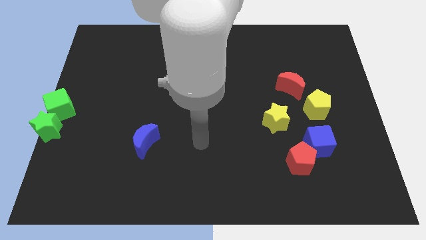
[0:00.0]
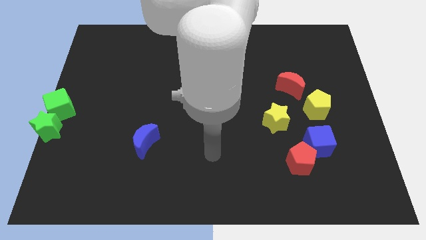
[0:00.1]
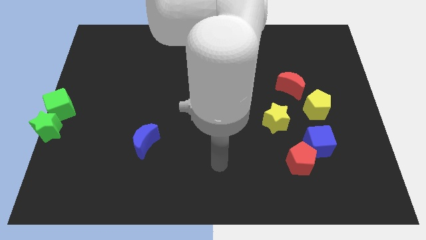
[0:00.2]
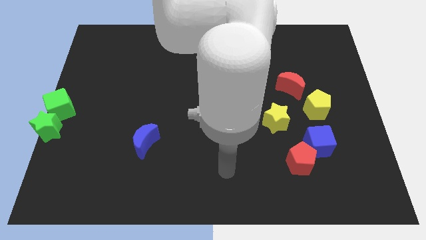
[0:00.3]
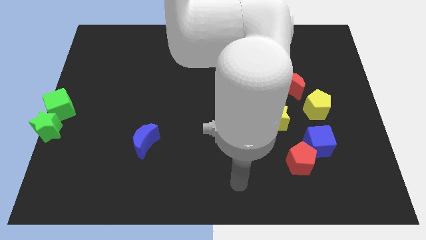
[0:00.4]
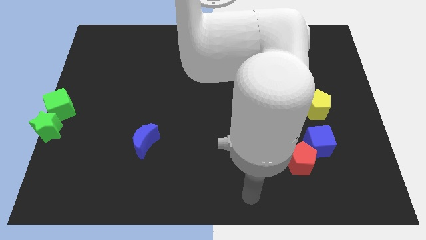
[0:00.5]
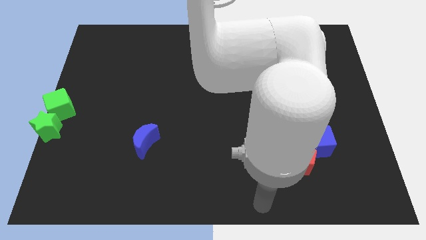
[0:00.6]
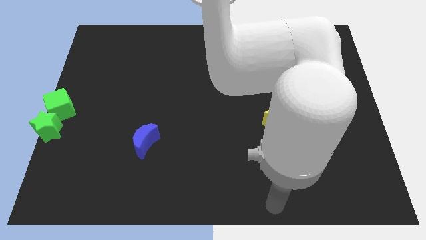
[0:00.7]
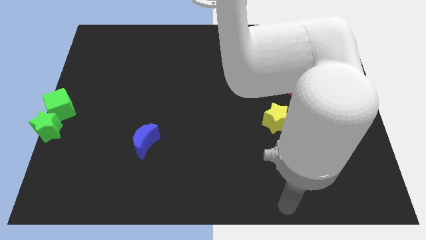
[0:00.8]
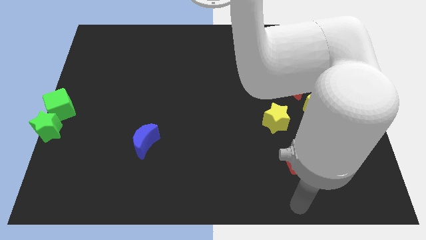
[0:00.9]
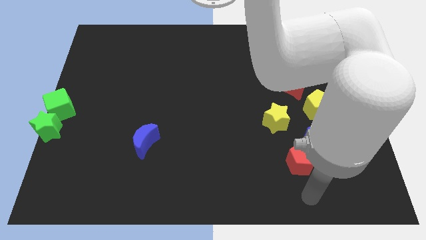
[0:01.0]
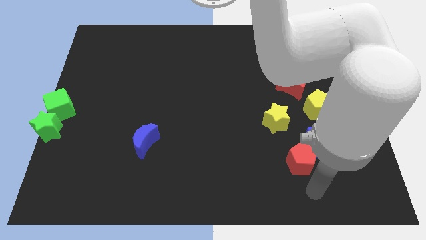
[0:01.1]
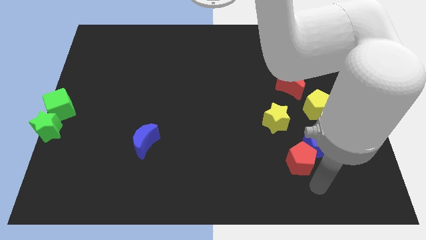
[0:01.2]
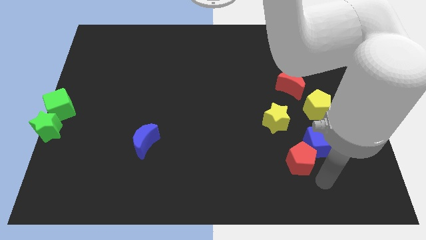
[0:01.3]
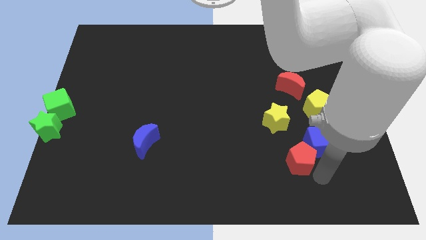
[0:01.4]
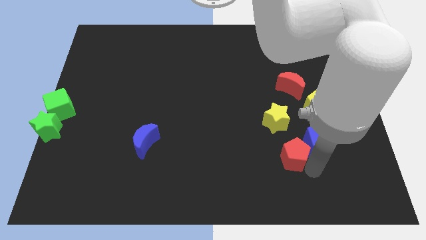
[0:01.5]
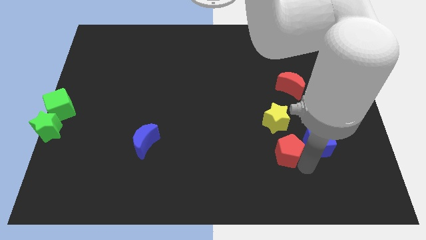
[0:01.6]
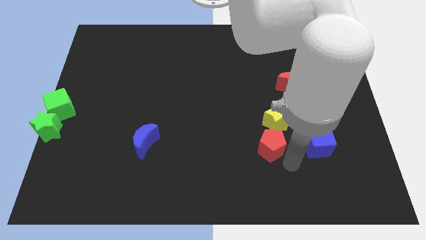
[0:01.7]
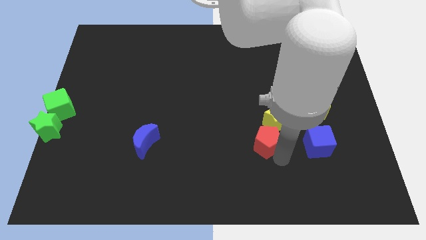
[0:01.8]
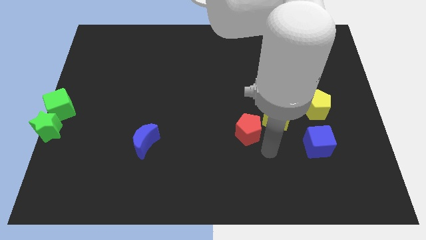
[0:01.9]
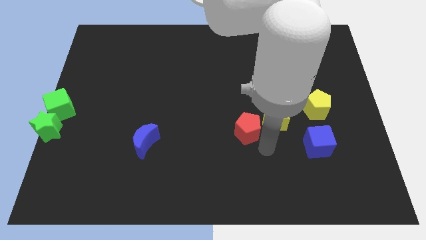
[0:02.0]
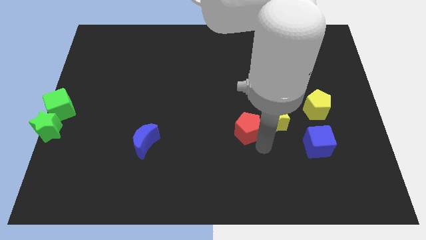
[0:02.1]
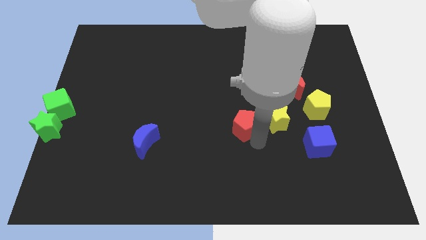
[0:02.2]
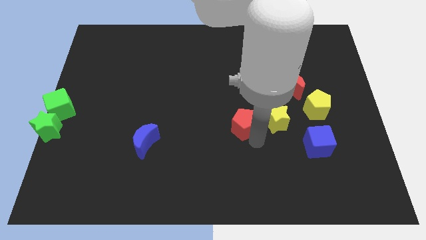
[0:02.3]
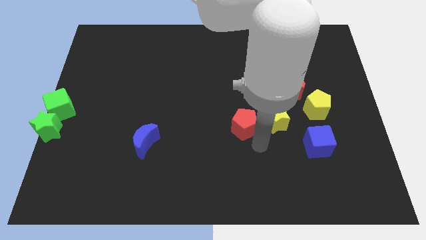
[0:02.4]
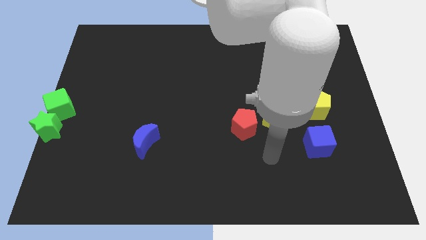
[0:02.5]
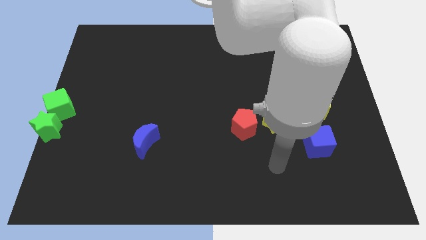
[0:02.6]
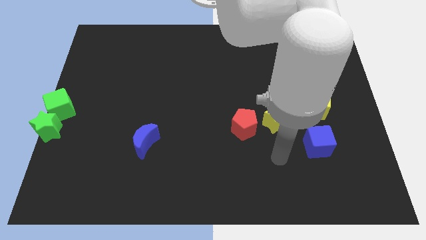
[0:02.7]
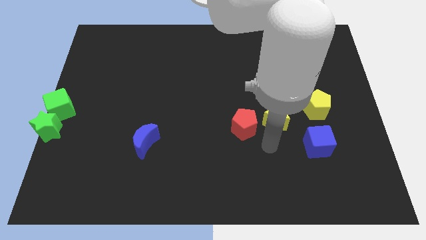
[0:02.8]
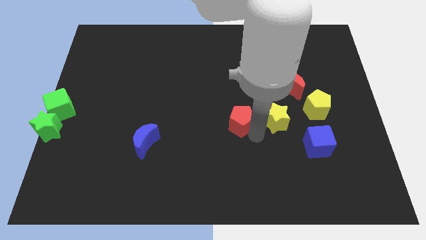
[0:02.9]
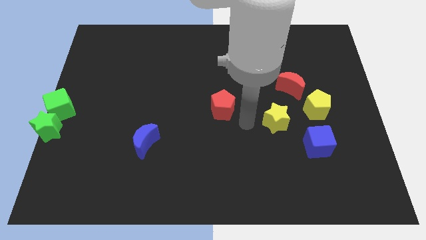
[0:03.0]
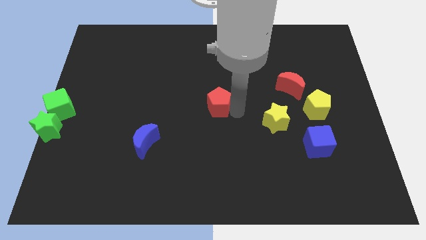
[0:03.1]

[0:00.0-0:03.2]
move the red pentagon to the center of the board

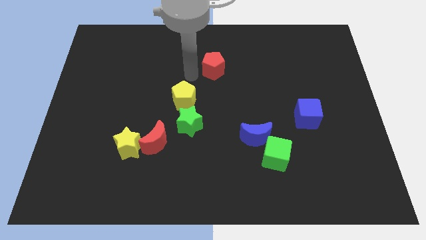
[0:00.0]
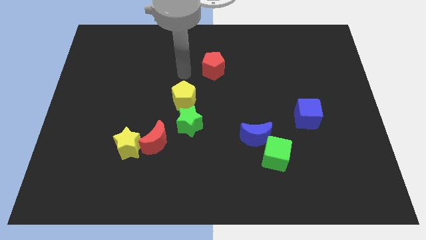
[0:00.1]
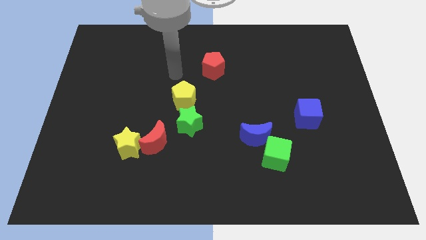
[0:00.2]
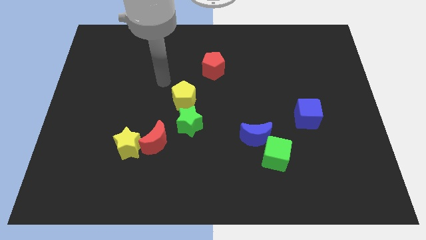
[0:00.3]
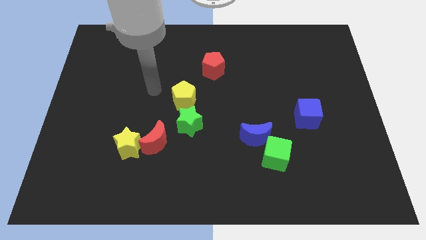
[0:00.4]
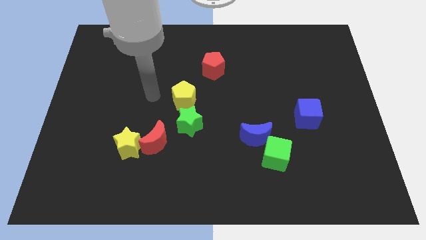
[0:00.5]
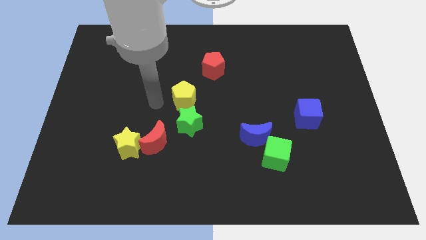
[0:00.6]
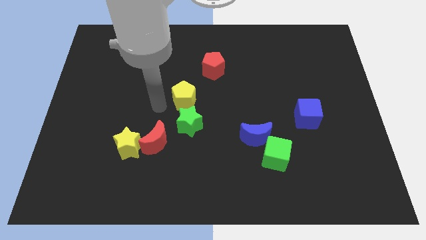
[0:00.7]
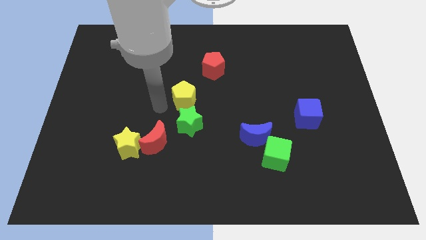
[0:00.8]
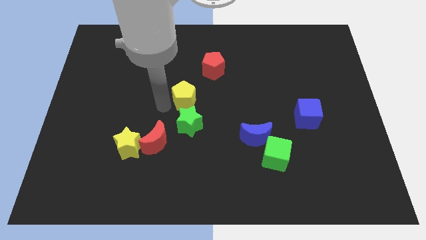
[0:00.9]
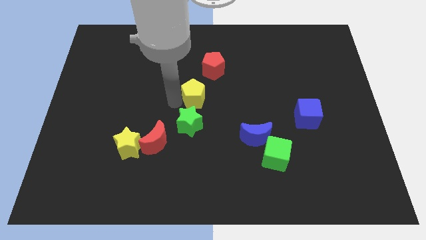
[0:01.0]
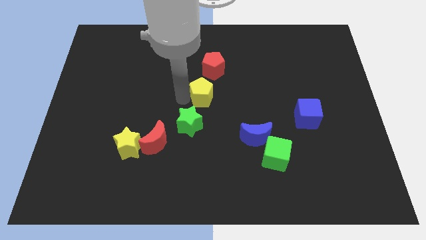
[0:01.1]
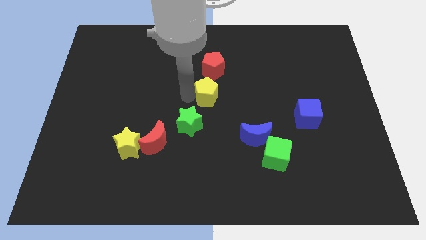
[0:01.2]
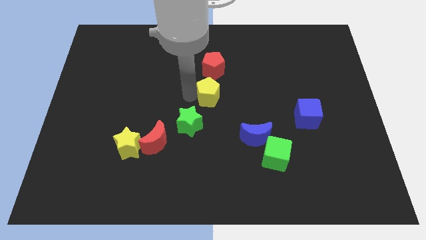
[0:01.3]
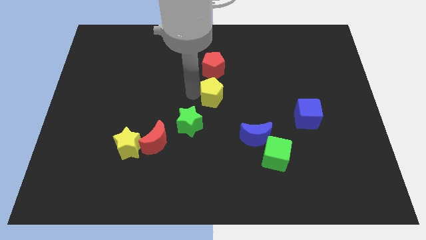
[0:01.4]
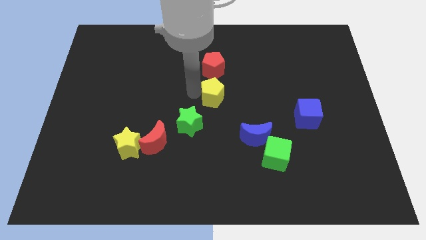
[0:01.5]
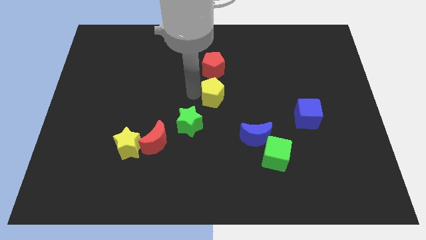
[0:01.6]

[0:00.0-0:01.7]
put the yellow pentagon vertically below the red pentagon

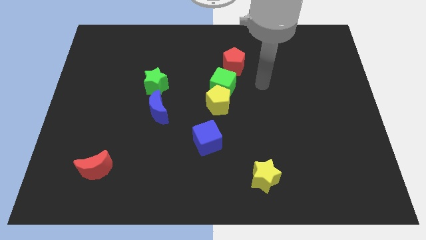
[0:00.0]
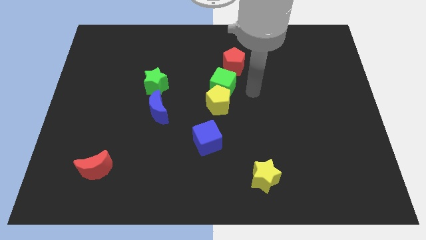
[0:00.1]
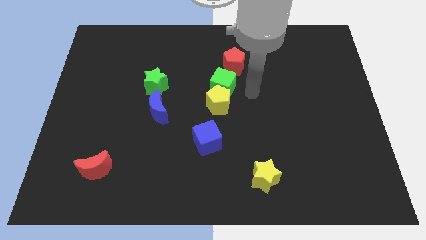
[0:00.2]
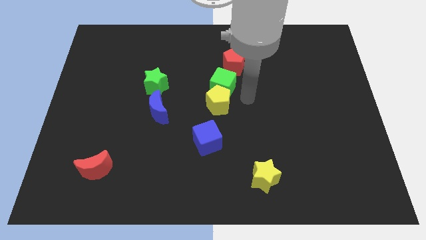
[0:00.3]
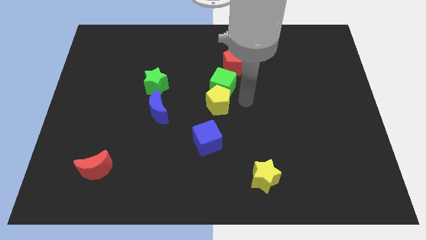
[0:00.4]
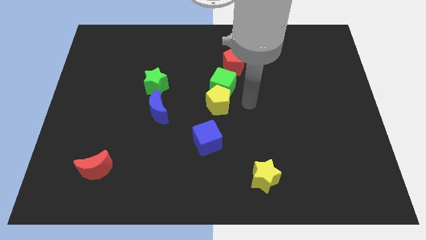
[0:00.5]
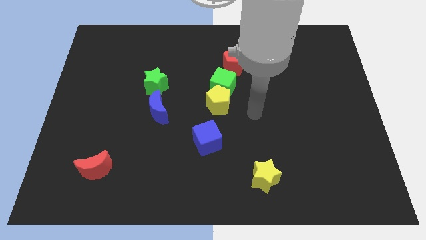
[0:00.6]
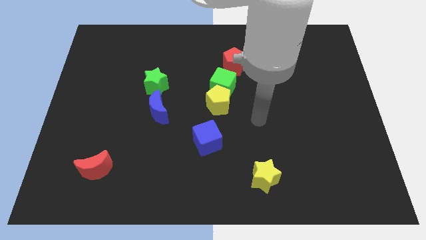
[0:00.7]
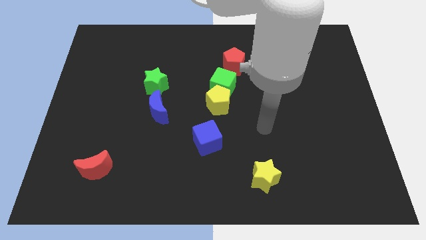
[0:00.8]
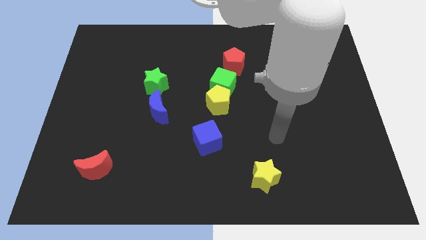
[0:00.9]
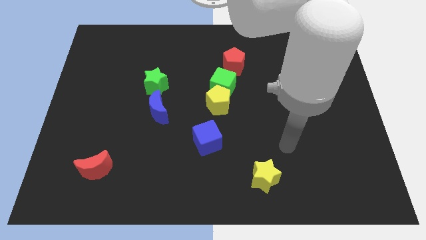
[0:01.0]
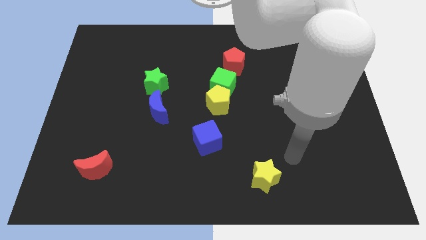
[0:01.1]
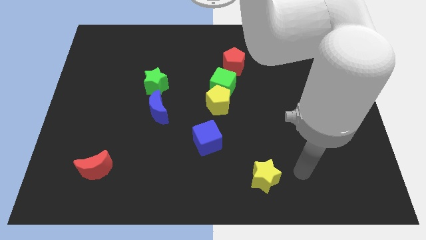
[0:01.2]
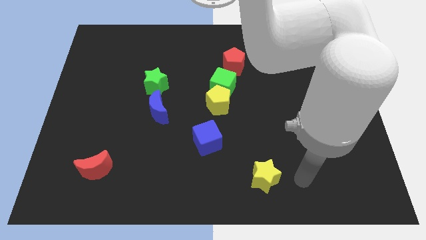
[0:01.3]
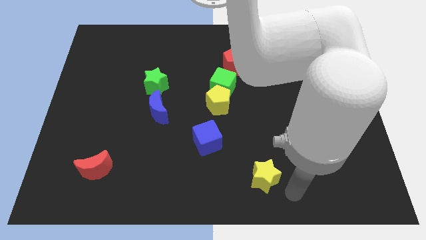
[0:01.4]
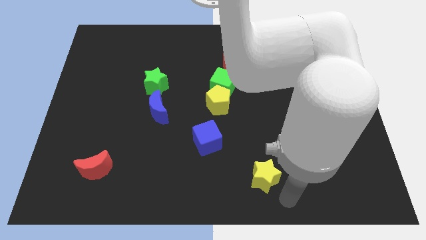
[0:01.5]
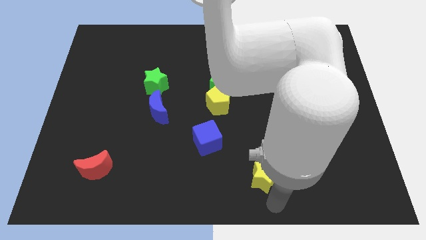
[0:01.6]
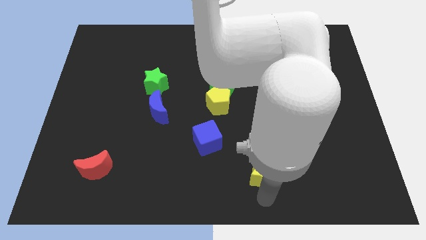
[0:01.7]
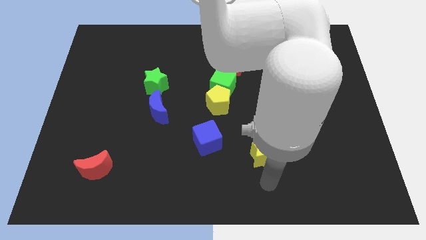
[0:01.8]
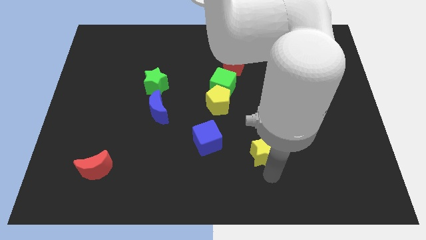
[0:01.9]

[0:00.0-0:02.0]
move the yellow star towards the top side of the board

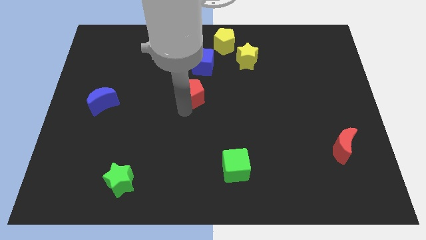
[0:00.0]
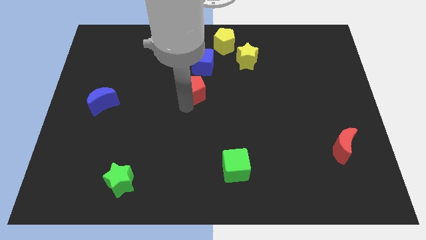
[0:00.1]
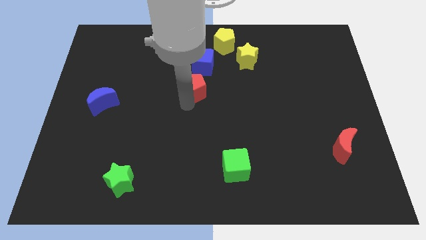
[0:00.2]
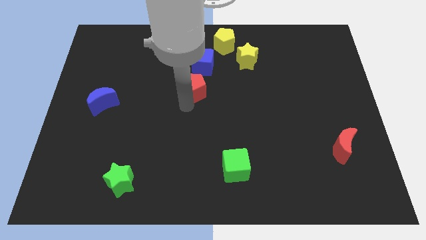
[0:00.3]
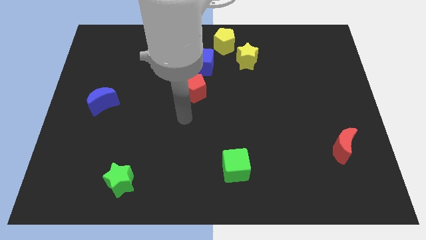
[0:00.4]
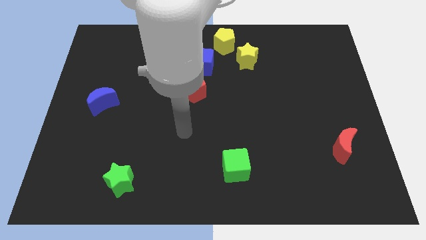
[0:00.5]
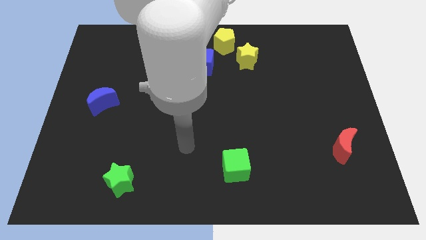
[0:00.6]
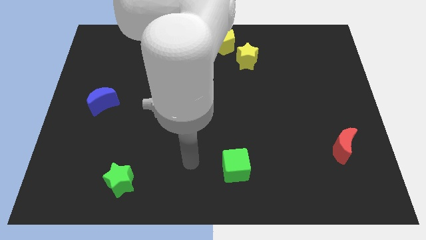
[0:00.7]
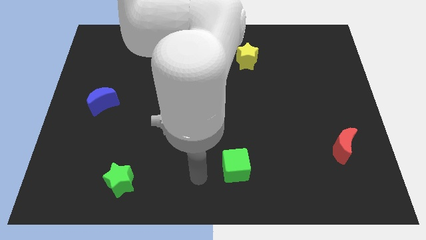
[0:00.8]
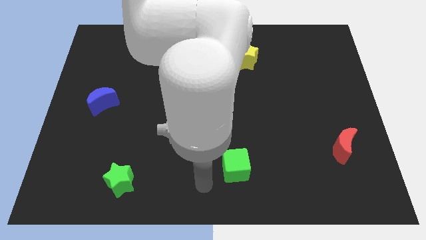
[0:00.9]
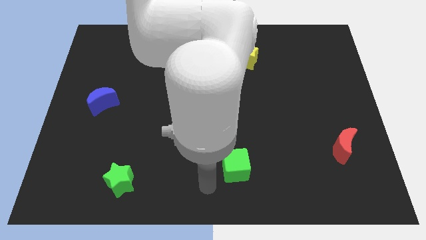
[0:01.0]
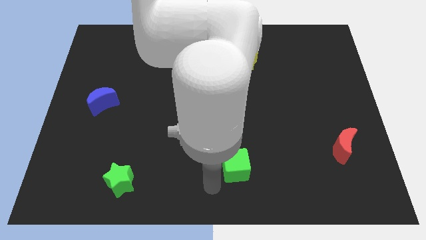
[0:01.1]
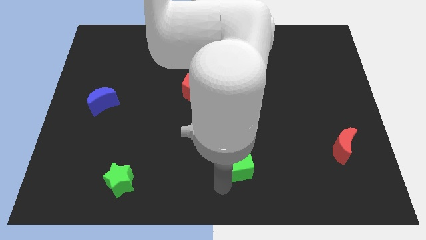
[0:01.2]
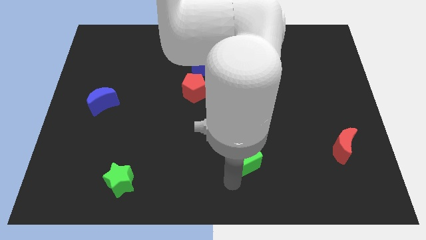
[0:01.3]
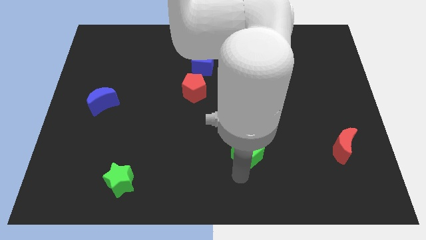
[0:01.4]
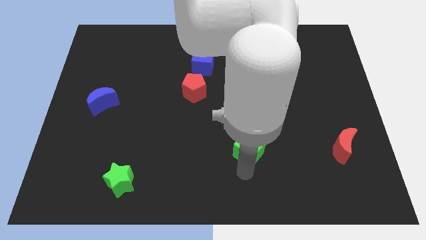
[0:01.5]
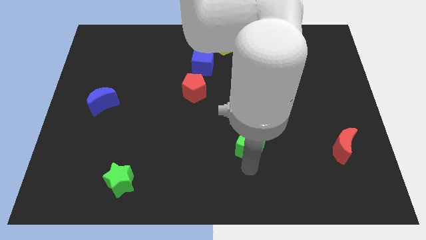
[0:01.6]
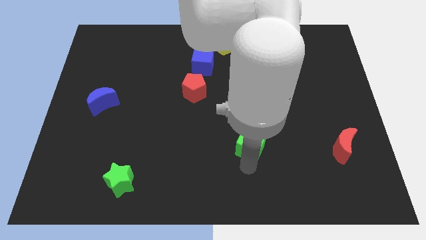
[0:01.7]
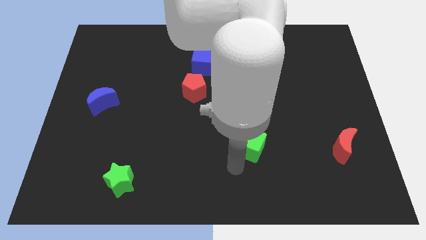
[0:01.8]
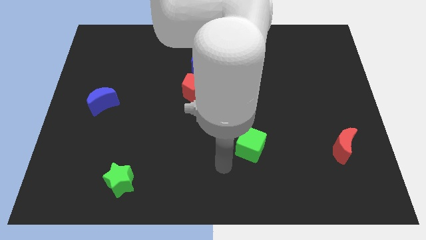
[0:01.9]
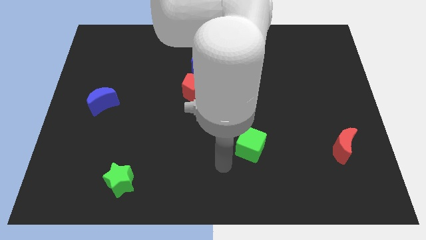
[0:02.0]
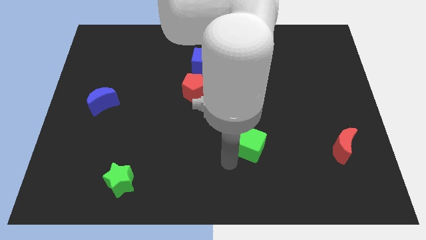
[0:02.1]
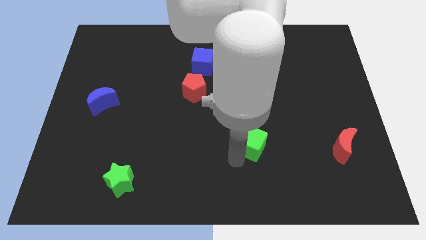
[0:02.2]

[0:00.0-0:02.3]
place the green cube horizontally to the left side of the red crescent
